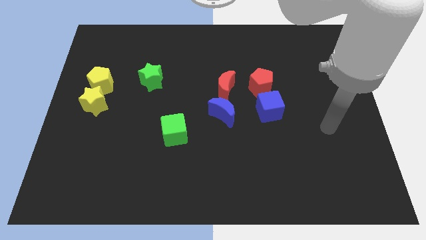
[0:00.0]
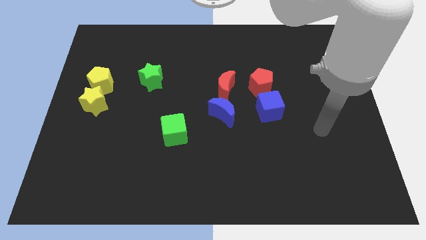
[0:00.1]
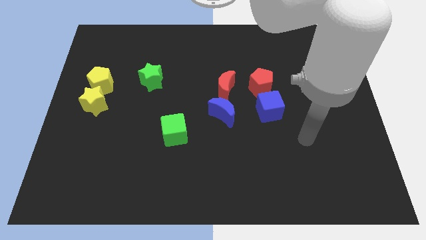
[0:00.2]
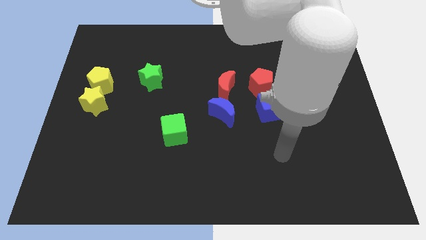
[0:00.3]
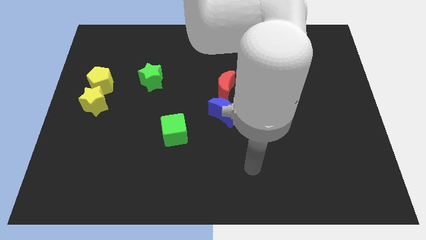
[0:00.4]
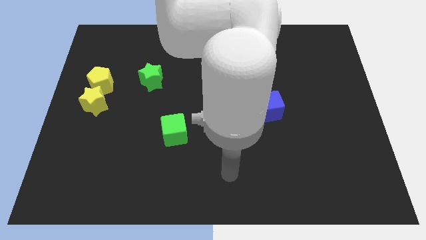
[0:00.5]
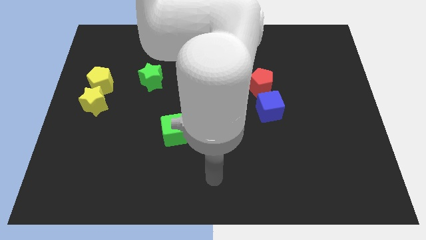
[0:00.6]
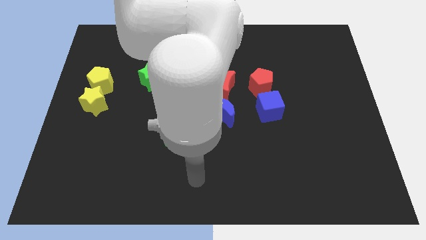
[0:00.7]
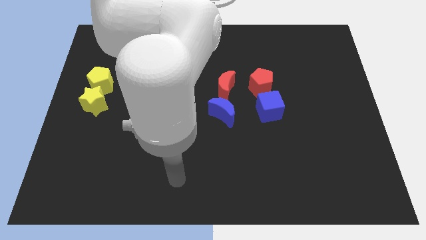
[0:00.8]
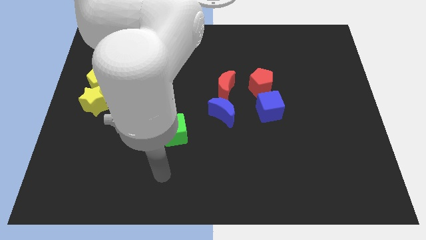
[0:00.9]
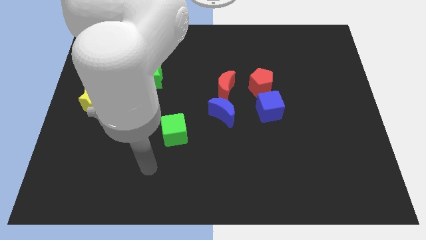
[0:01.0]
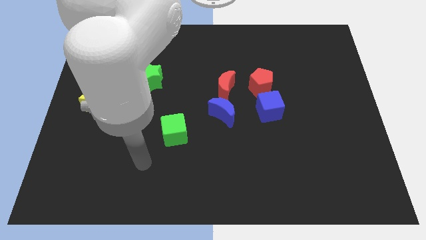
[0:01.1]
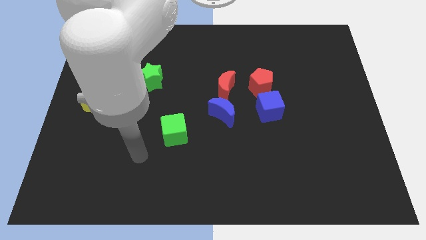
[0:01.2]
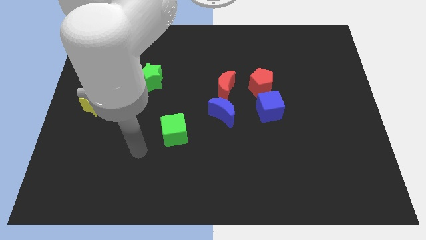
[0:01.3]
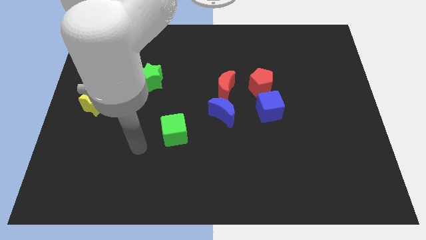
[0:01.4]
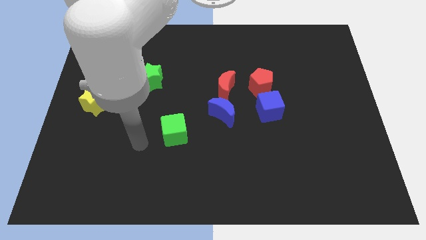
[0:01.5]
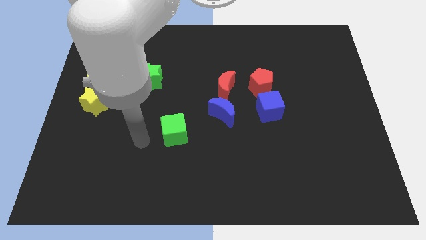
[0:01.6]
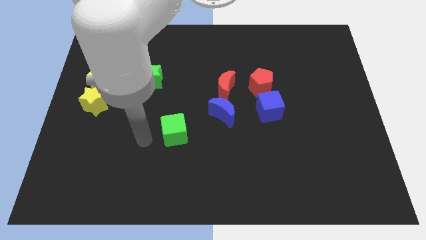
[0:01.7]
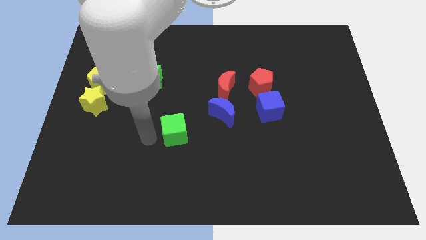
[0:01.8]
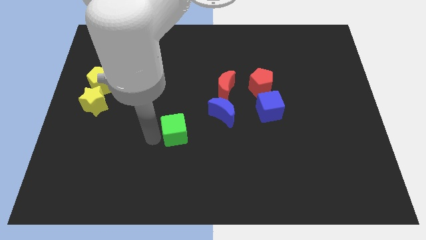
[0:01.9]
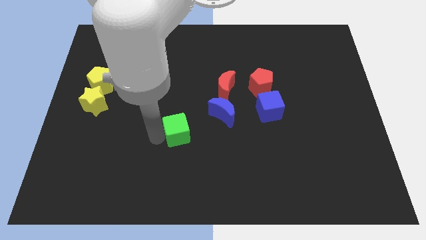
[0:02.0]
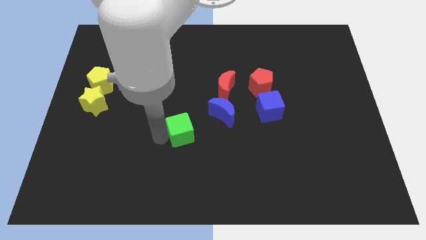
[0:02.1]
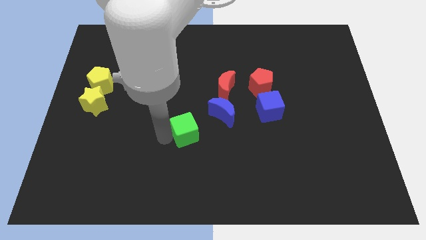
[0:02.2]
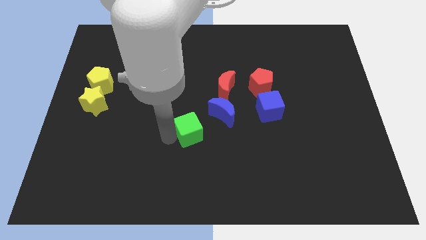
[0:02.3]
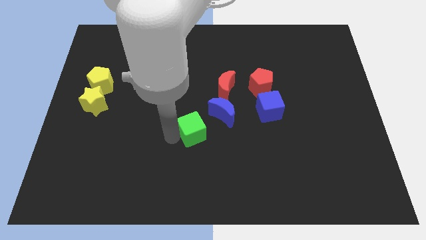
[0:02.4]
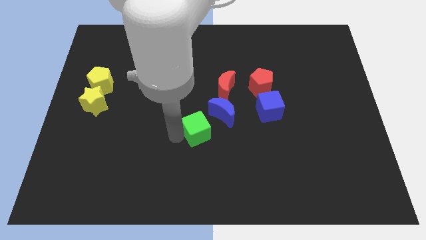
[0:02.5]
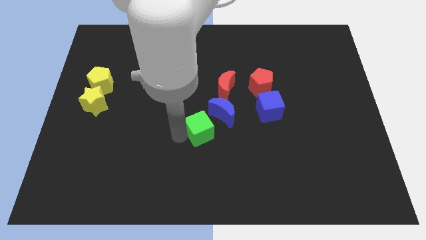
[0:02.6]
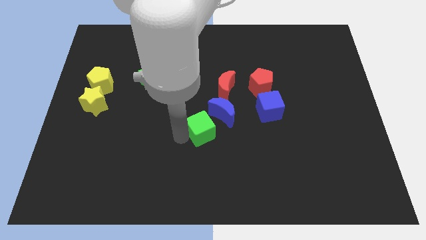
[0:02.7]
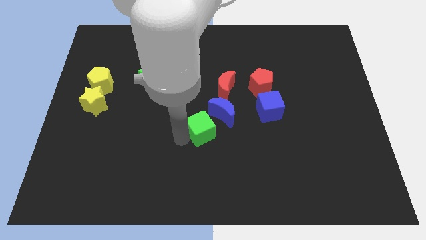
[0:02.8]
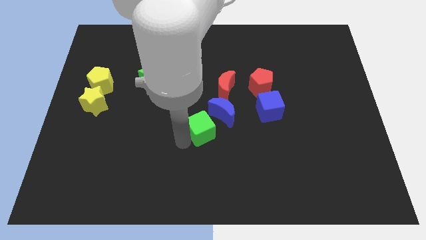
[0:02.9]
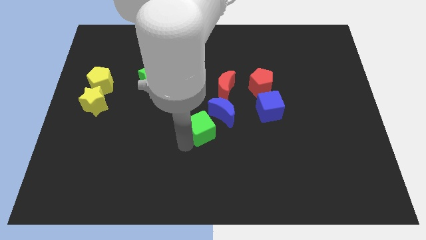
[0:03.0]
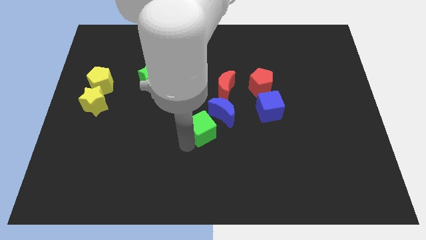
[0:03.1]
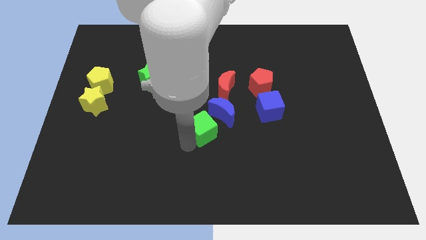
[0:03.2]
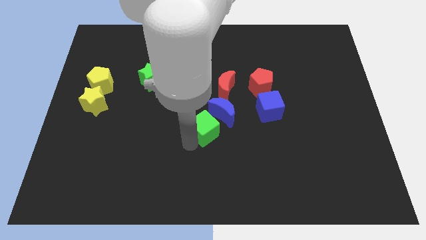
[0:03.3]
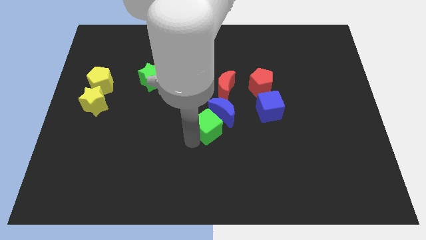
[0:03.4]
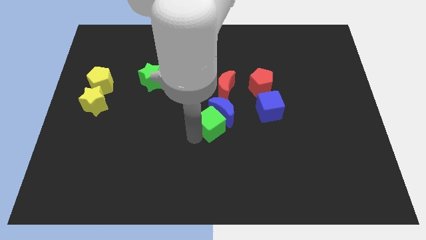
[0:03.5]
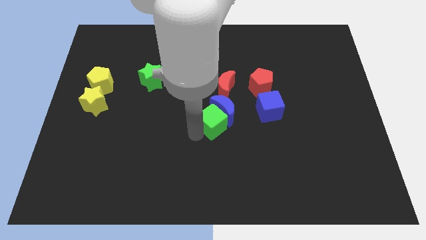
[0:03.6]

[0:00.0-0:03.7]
put the green cube to the blue moon

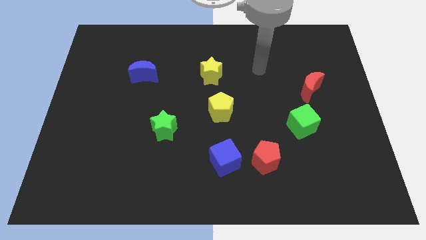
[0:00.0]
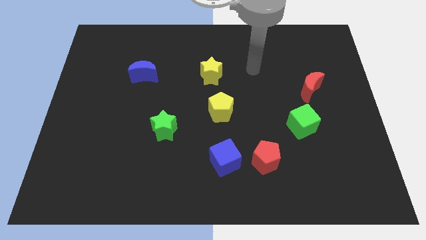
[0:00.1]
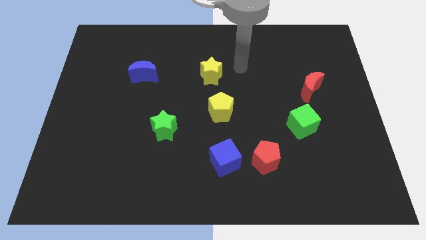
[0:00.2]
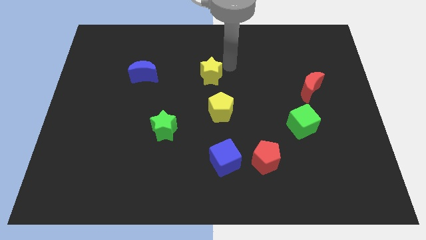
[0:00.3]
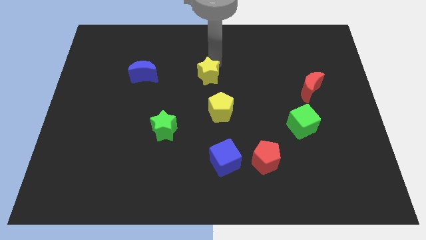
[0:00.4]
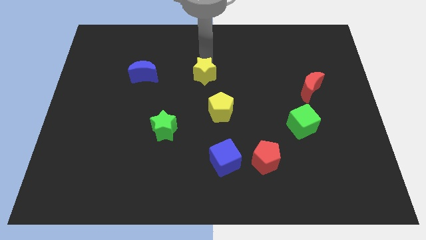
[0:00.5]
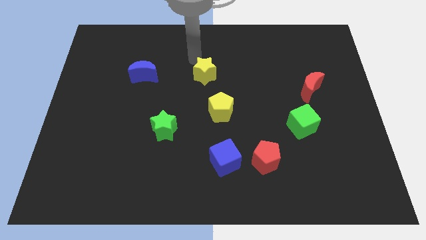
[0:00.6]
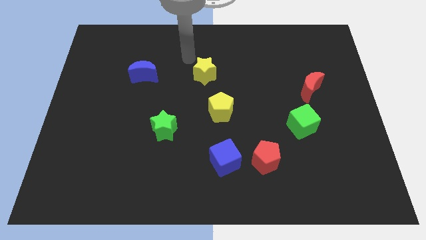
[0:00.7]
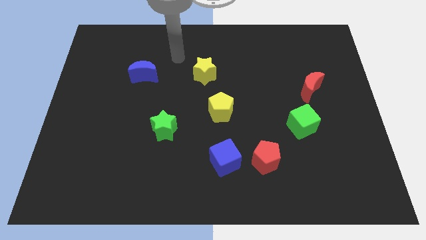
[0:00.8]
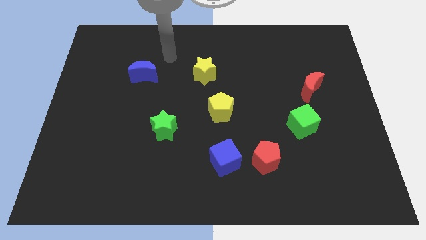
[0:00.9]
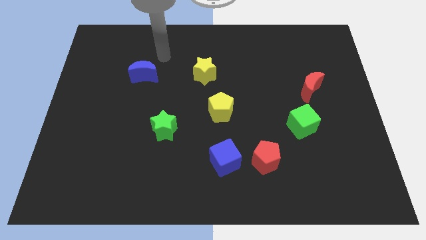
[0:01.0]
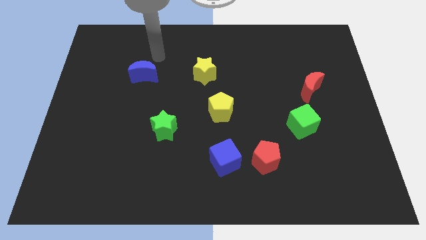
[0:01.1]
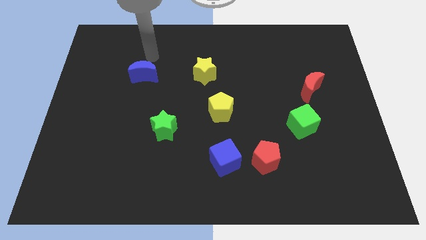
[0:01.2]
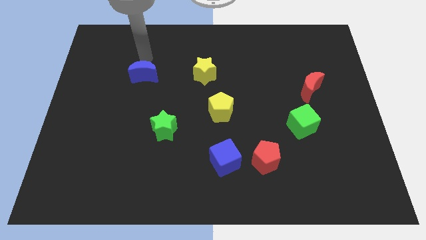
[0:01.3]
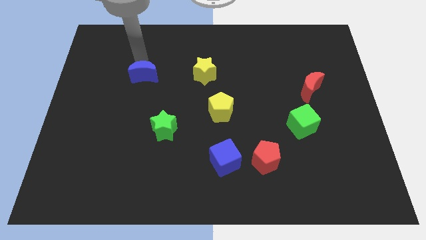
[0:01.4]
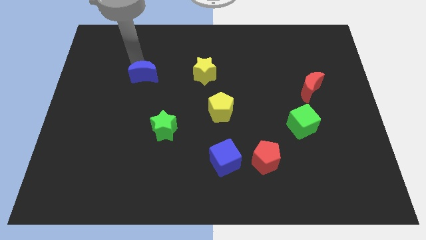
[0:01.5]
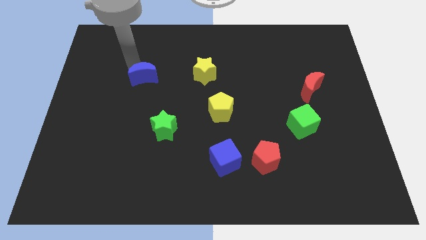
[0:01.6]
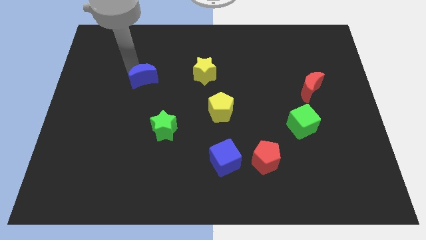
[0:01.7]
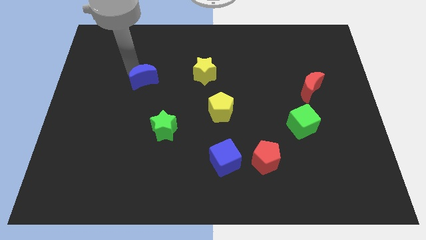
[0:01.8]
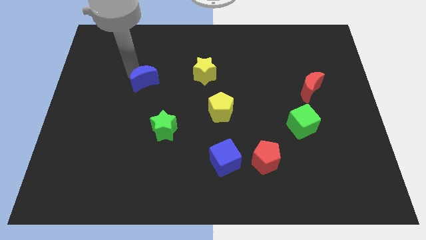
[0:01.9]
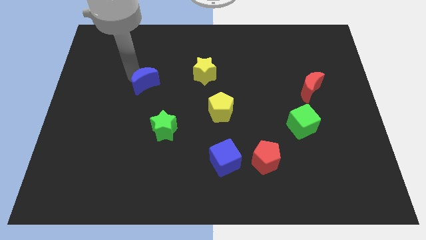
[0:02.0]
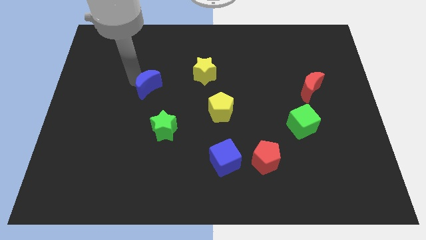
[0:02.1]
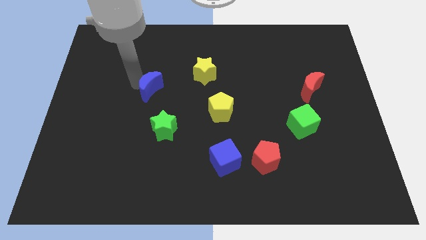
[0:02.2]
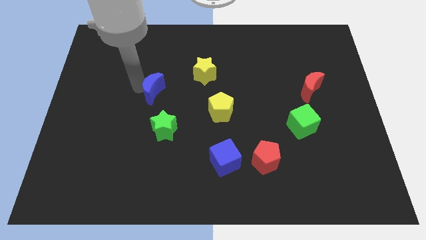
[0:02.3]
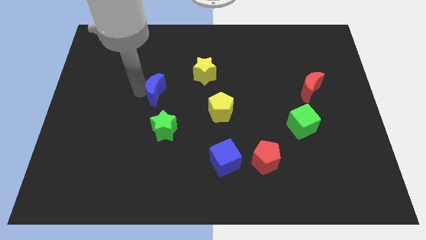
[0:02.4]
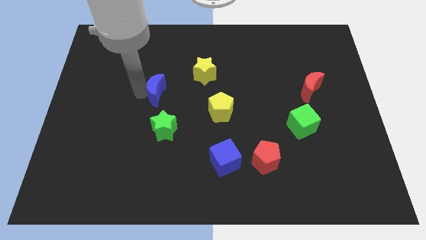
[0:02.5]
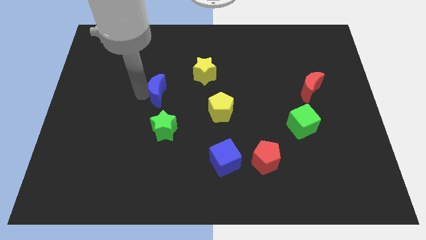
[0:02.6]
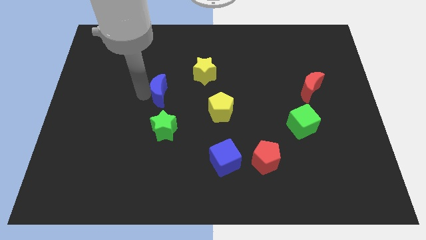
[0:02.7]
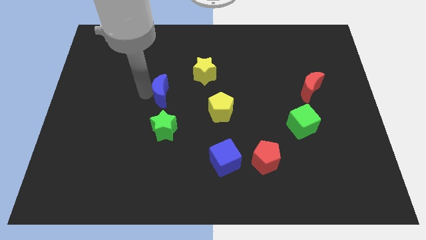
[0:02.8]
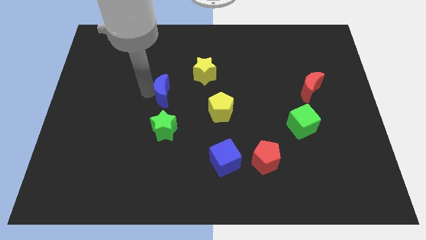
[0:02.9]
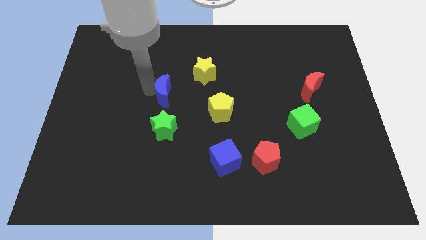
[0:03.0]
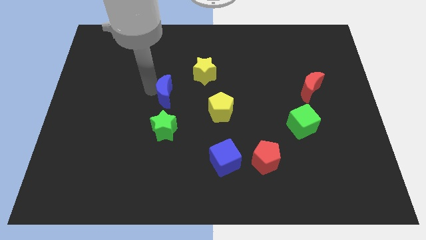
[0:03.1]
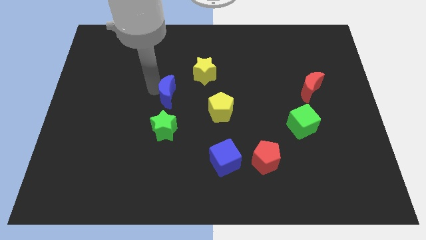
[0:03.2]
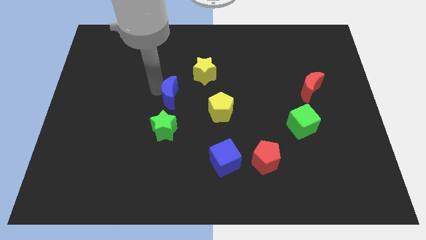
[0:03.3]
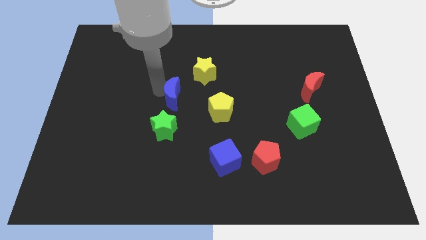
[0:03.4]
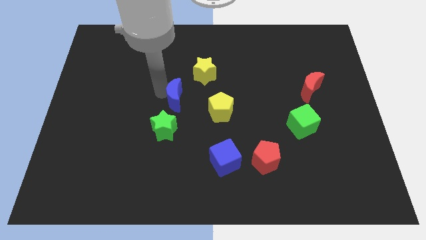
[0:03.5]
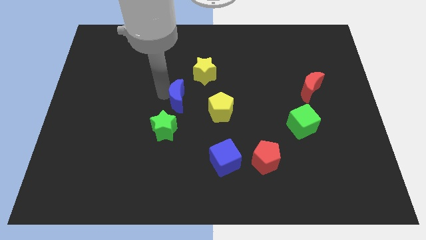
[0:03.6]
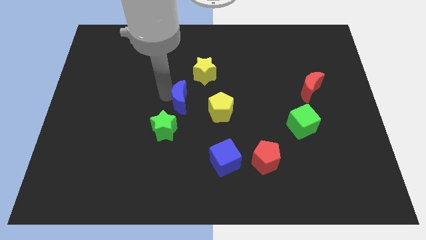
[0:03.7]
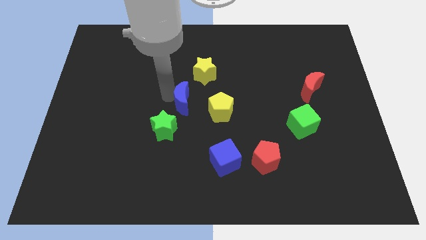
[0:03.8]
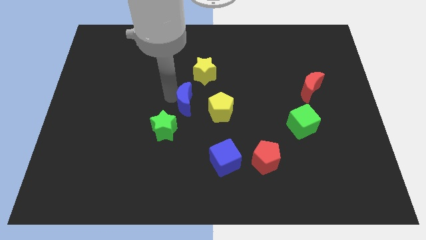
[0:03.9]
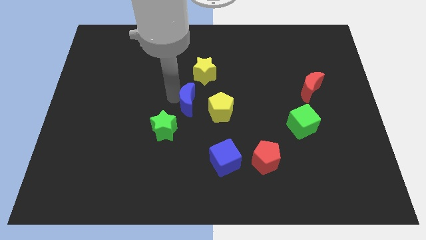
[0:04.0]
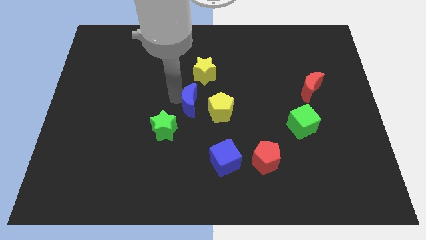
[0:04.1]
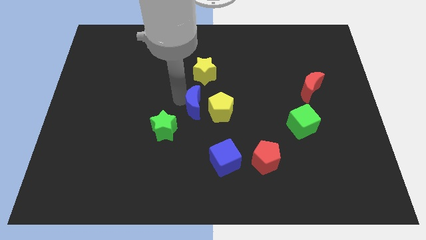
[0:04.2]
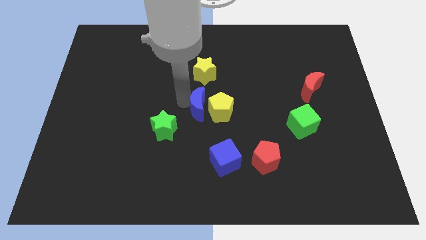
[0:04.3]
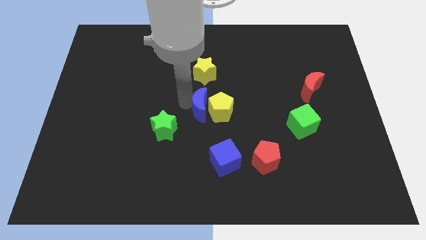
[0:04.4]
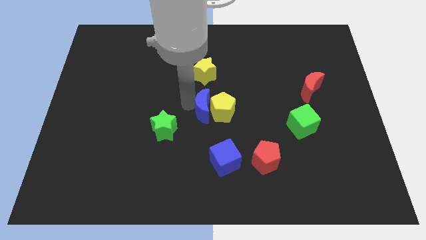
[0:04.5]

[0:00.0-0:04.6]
slide the blue moon next to the yellow pentagon
